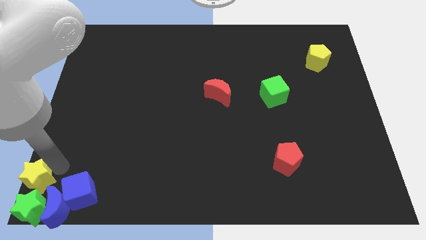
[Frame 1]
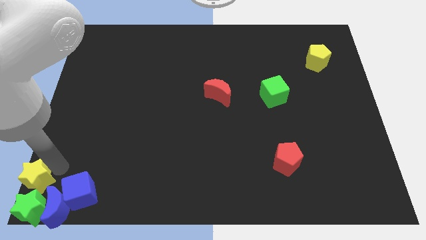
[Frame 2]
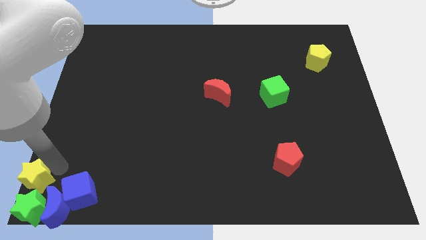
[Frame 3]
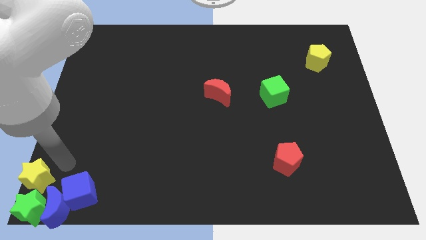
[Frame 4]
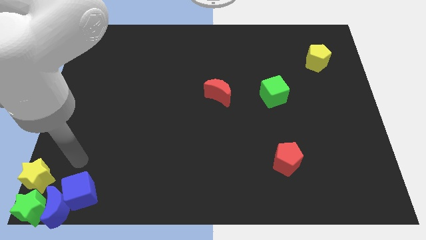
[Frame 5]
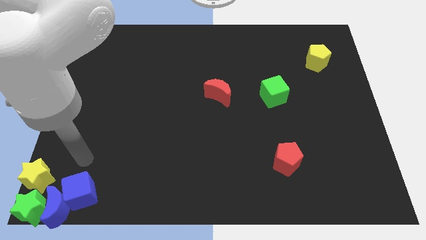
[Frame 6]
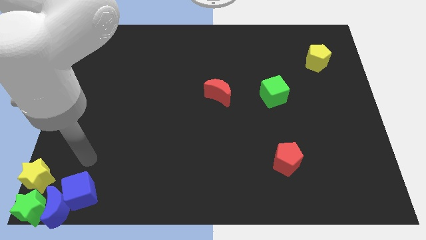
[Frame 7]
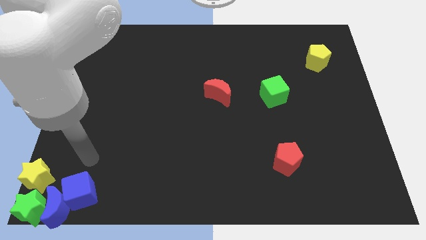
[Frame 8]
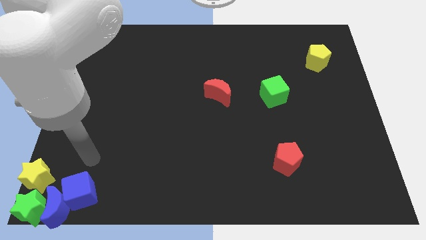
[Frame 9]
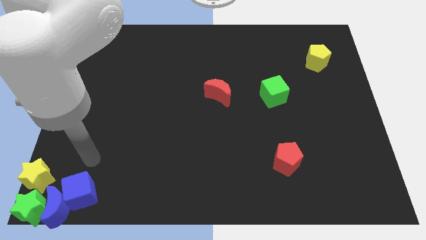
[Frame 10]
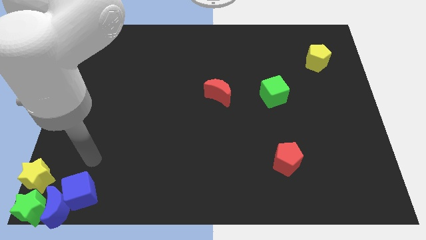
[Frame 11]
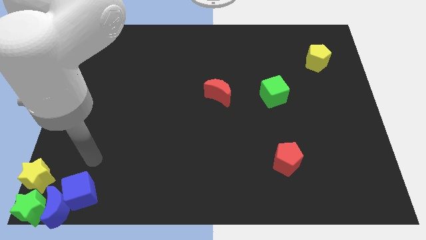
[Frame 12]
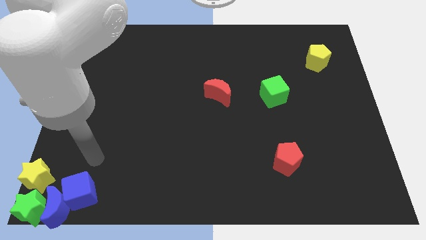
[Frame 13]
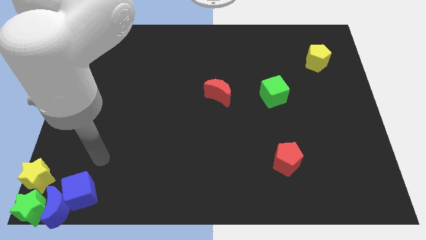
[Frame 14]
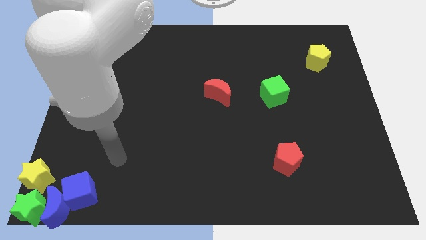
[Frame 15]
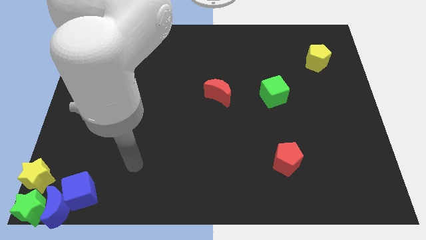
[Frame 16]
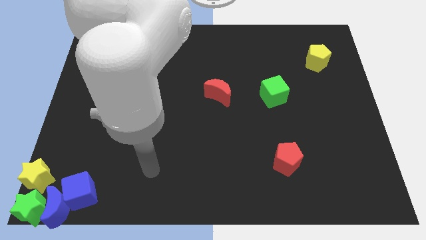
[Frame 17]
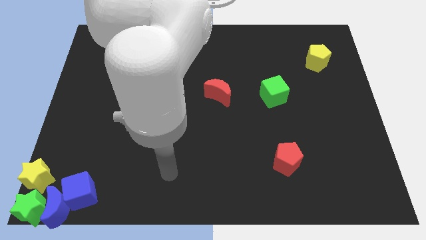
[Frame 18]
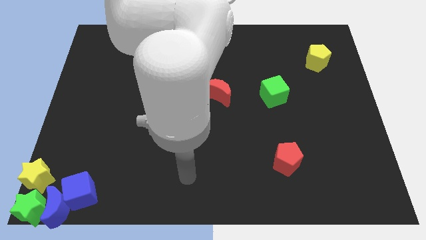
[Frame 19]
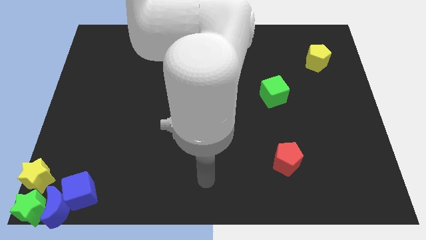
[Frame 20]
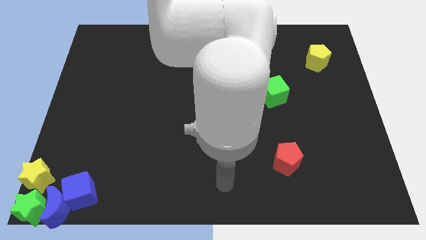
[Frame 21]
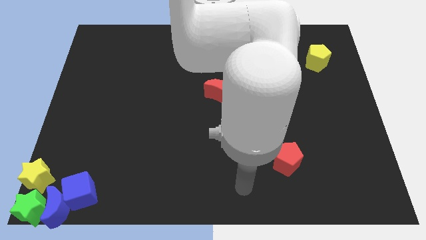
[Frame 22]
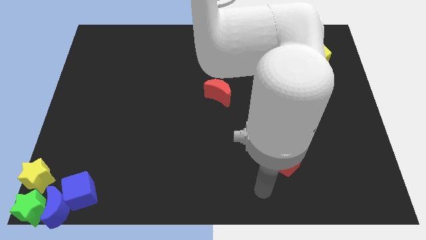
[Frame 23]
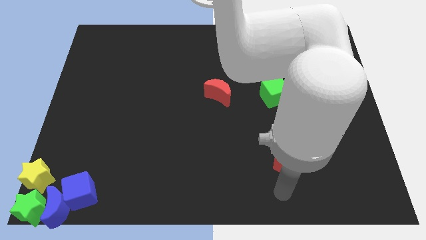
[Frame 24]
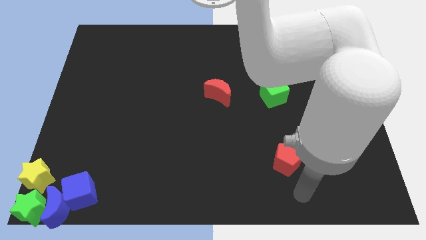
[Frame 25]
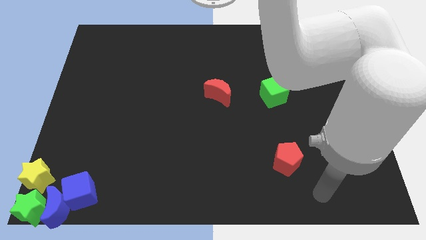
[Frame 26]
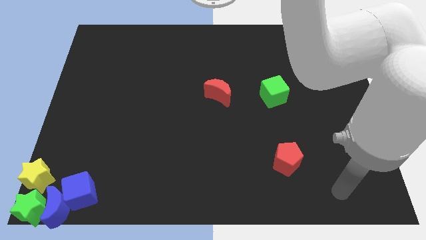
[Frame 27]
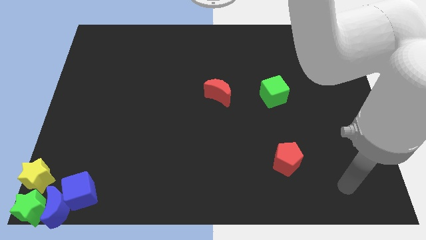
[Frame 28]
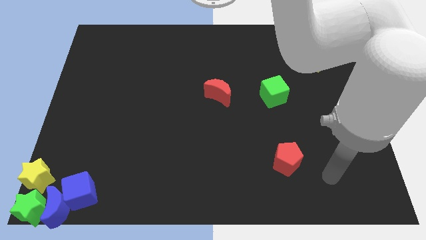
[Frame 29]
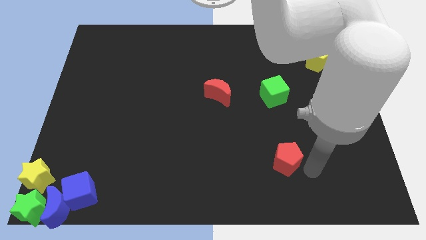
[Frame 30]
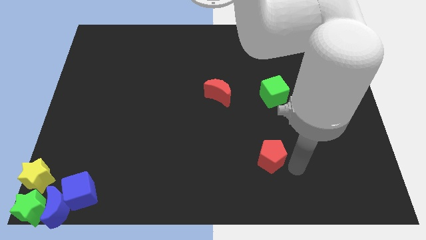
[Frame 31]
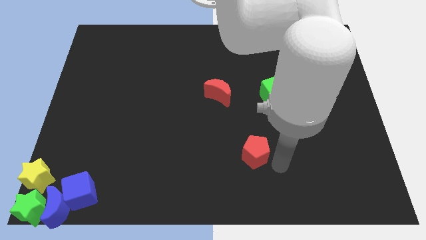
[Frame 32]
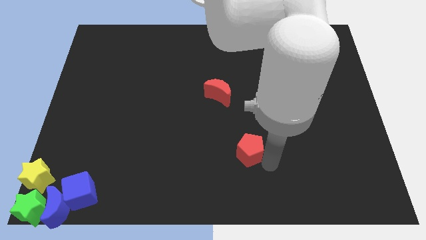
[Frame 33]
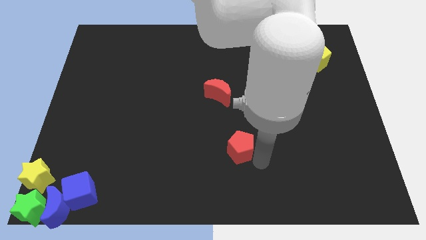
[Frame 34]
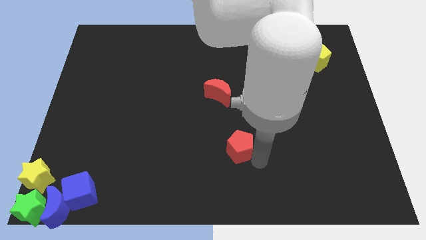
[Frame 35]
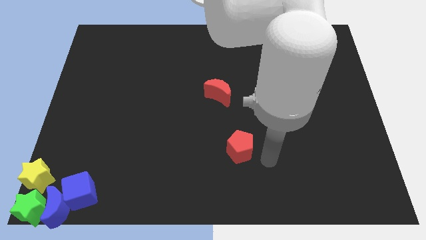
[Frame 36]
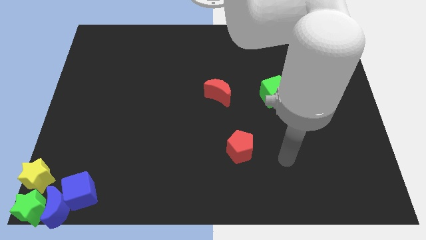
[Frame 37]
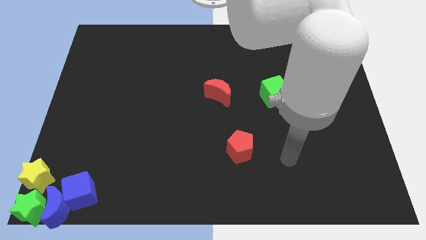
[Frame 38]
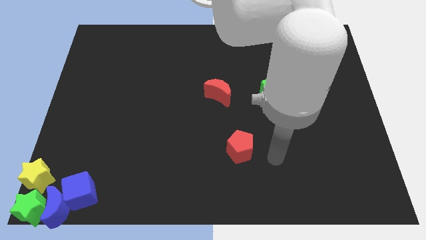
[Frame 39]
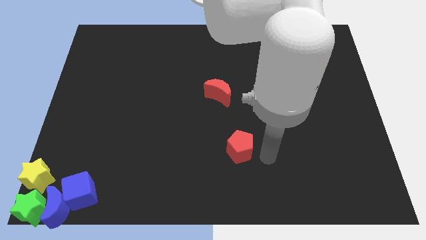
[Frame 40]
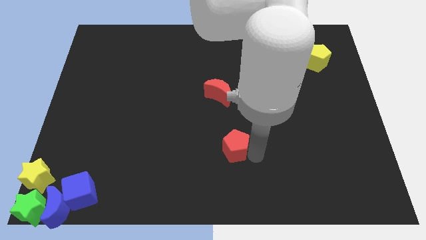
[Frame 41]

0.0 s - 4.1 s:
move the red pentagon towards the bottom side of the red moon

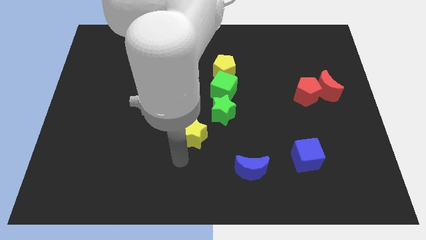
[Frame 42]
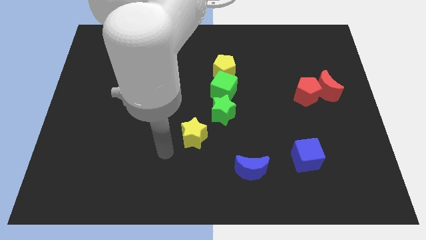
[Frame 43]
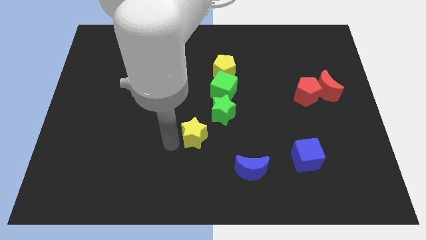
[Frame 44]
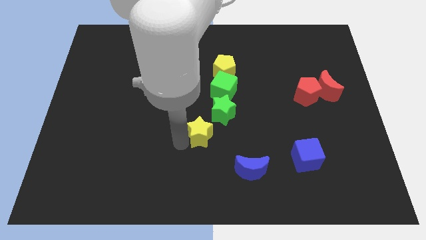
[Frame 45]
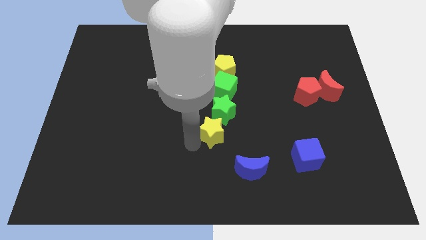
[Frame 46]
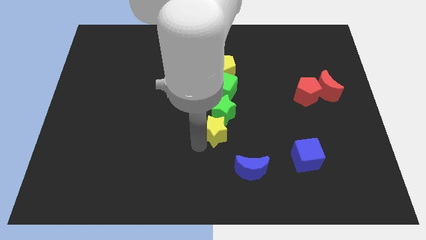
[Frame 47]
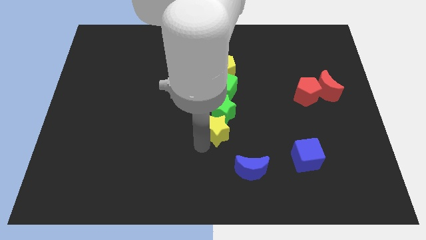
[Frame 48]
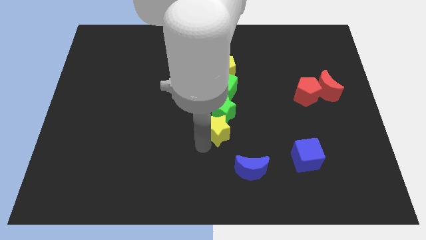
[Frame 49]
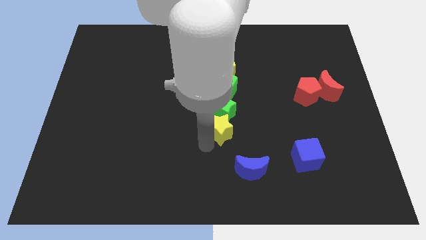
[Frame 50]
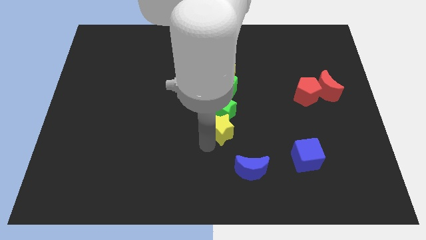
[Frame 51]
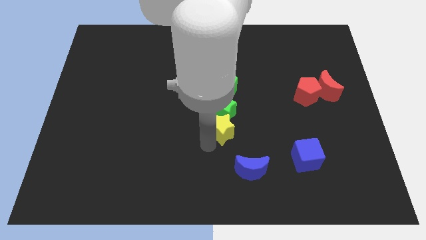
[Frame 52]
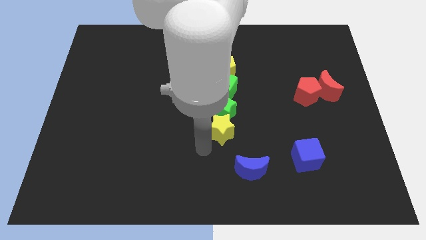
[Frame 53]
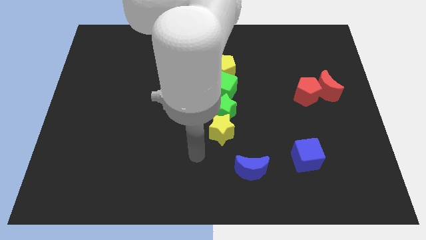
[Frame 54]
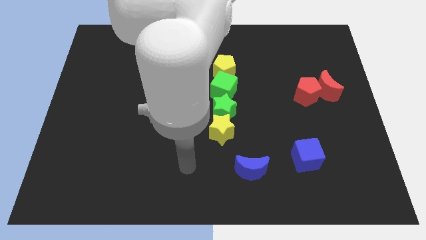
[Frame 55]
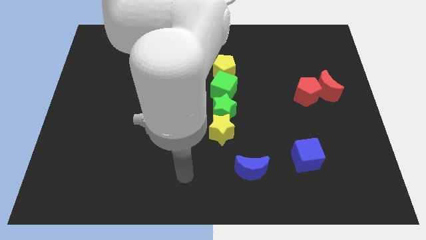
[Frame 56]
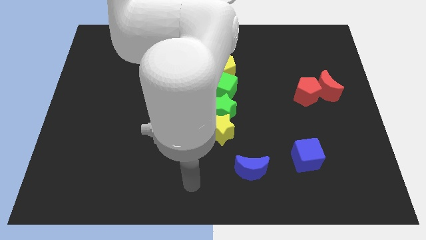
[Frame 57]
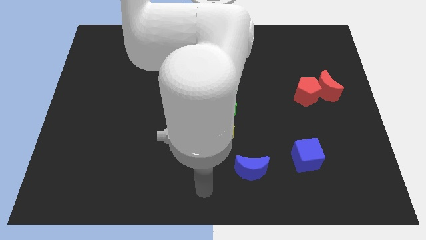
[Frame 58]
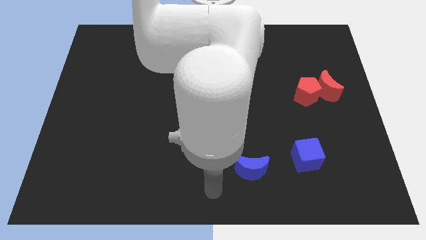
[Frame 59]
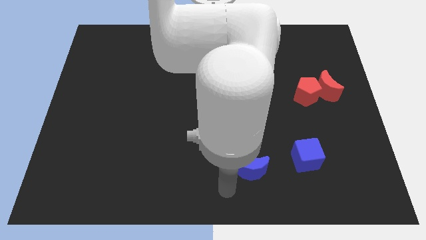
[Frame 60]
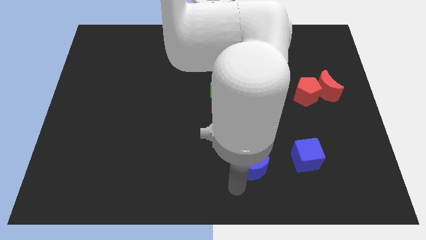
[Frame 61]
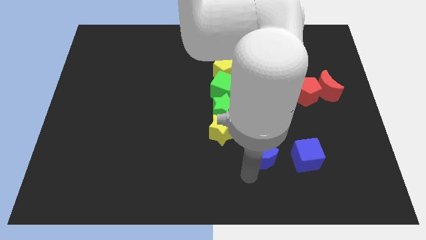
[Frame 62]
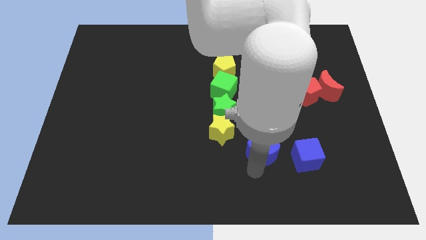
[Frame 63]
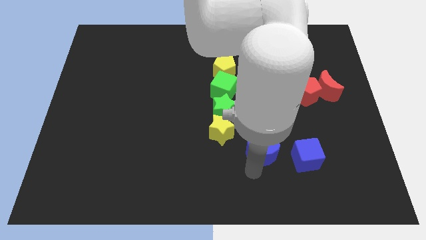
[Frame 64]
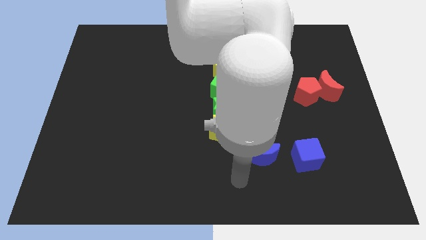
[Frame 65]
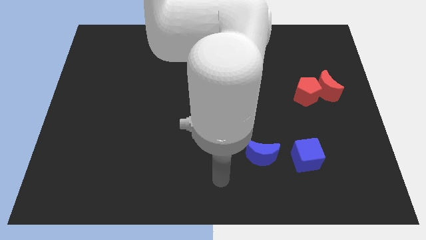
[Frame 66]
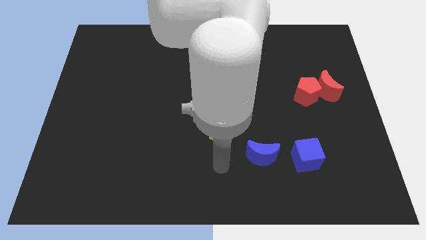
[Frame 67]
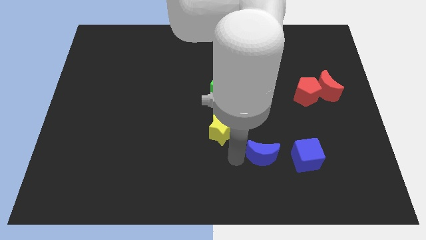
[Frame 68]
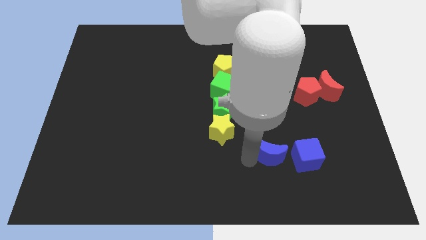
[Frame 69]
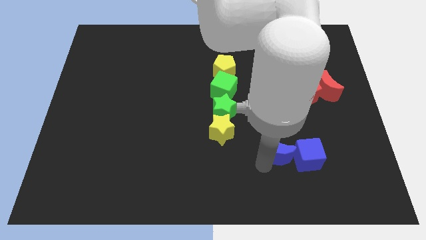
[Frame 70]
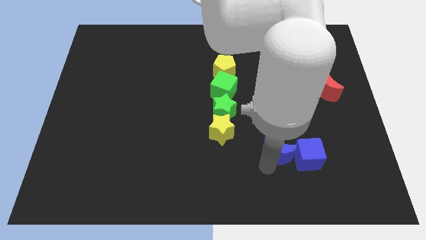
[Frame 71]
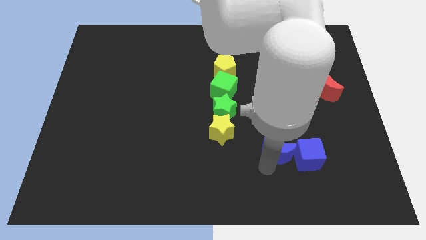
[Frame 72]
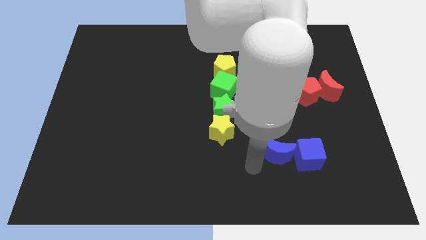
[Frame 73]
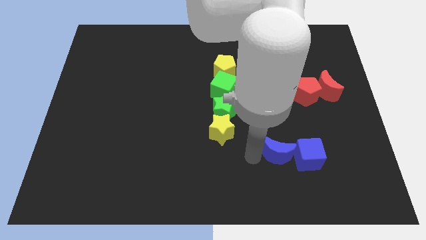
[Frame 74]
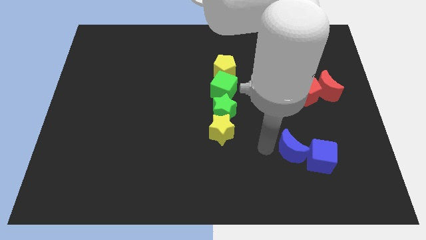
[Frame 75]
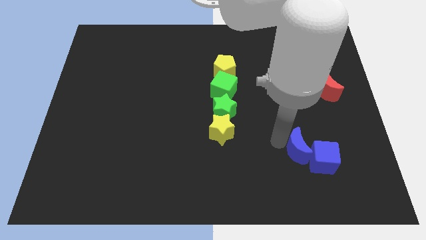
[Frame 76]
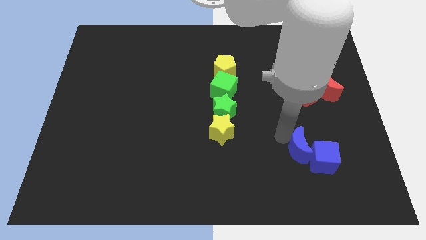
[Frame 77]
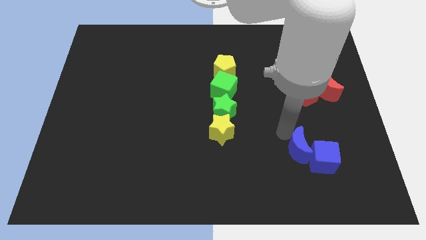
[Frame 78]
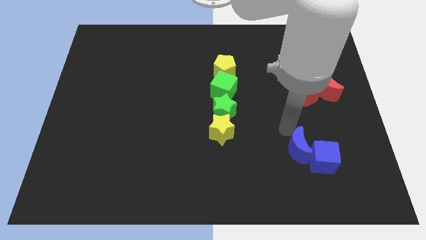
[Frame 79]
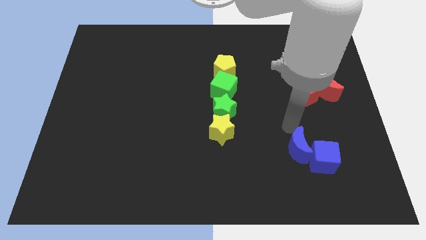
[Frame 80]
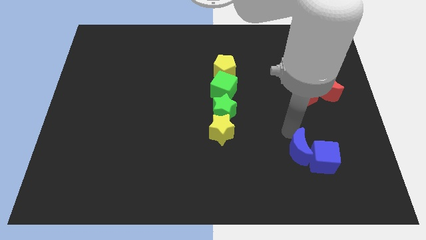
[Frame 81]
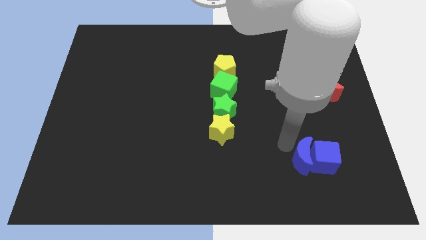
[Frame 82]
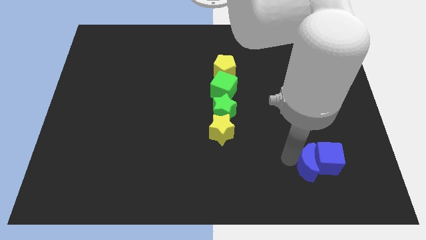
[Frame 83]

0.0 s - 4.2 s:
push the blue moon into the blue cube

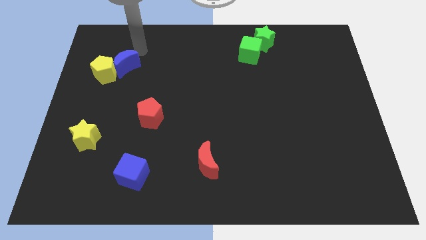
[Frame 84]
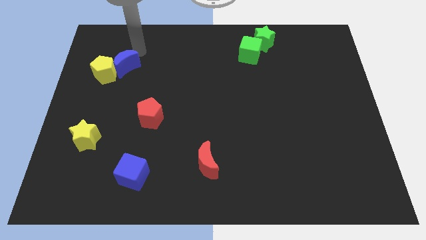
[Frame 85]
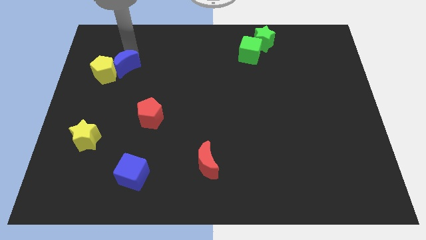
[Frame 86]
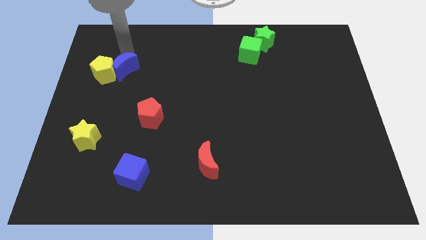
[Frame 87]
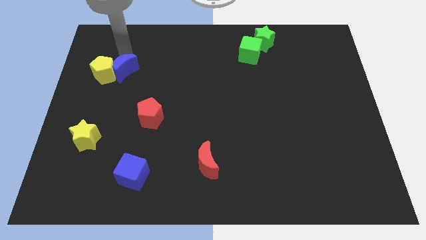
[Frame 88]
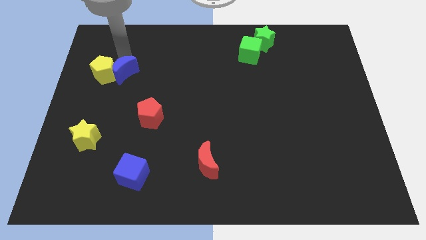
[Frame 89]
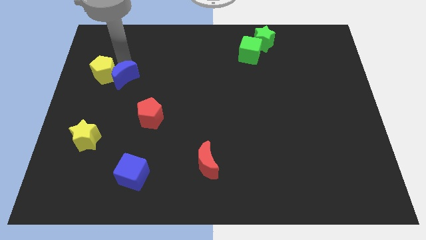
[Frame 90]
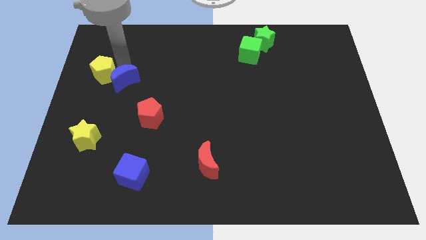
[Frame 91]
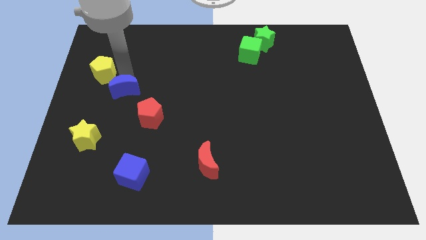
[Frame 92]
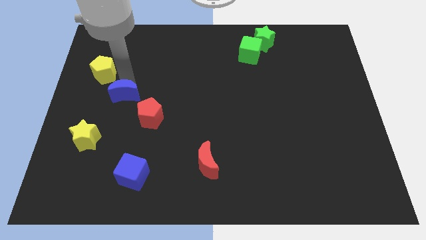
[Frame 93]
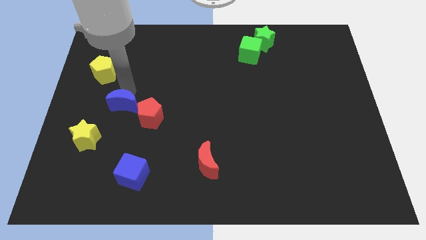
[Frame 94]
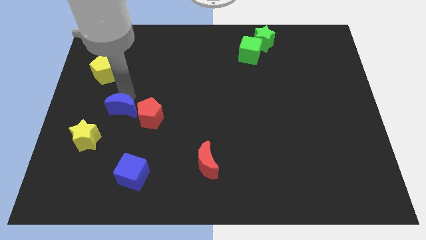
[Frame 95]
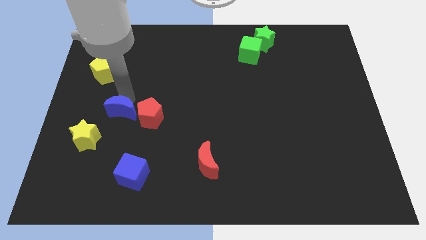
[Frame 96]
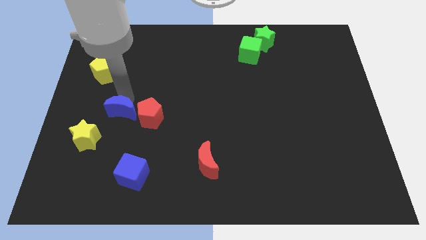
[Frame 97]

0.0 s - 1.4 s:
push the blue crescent to the left of the red pentagon
